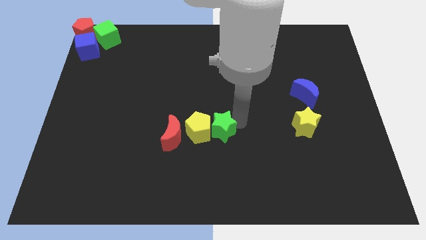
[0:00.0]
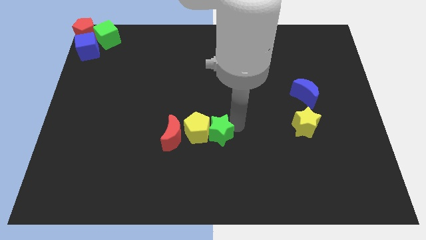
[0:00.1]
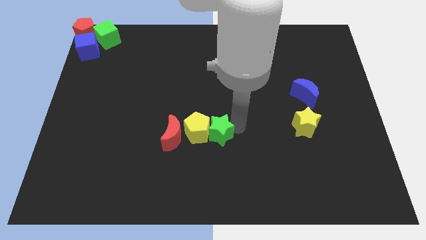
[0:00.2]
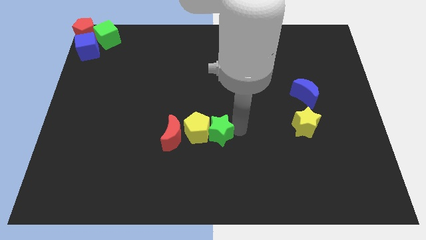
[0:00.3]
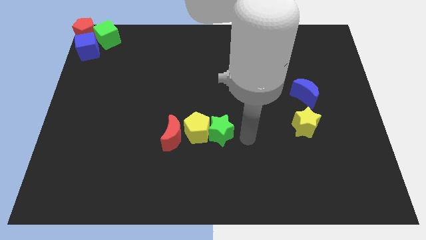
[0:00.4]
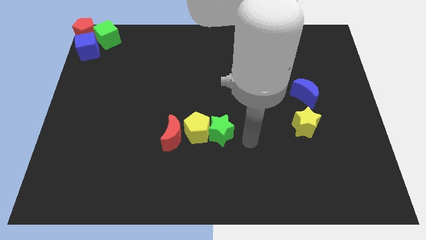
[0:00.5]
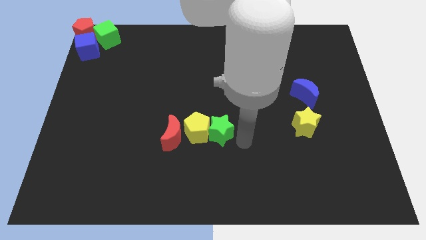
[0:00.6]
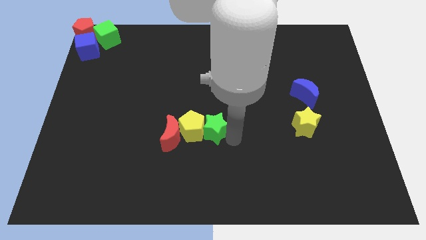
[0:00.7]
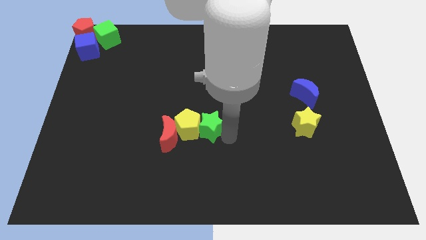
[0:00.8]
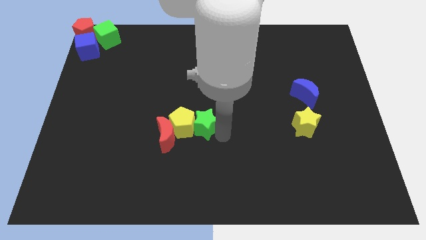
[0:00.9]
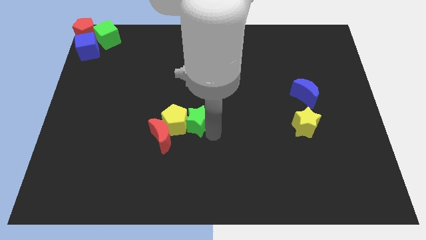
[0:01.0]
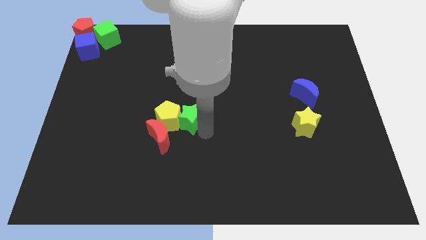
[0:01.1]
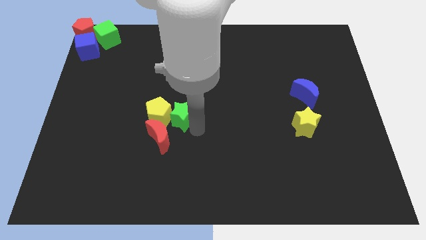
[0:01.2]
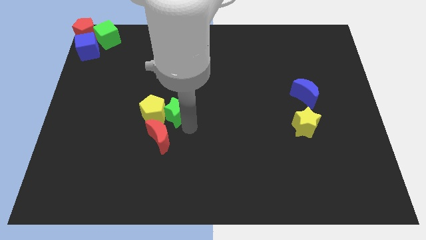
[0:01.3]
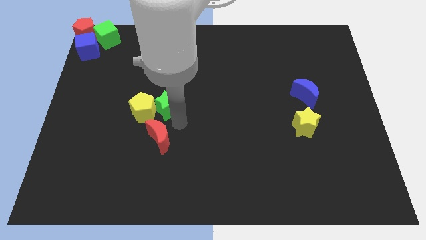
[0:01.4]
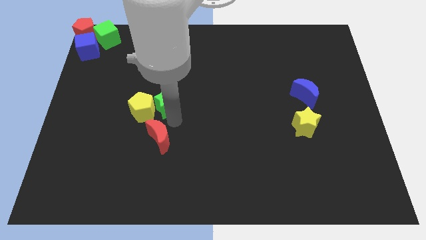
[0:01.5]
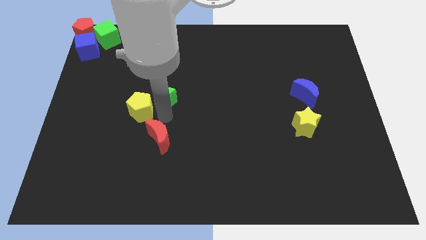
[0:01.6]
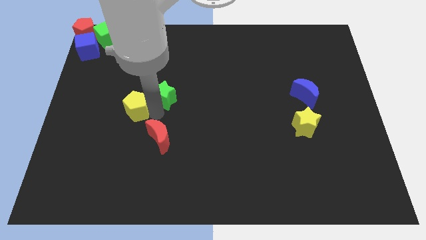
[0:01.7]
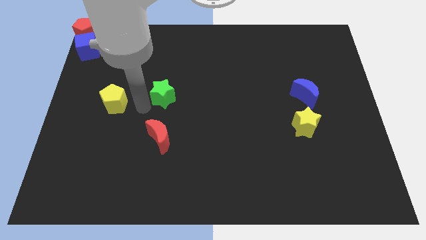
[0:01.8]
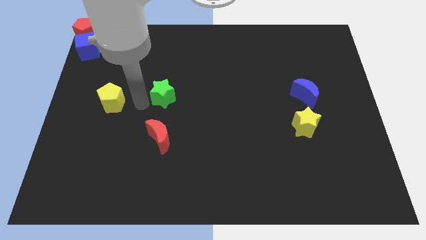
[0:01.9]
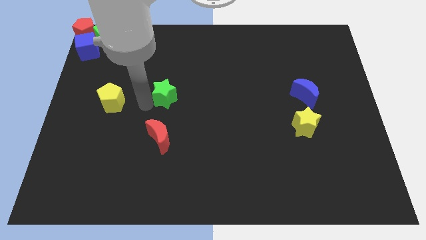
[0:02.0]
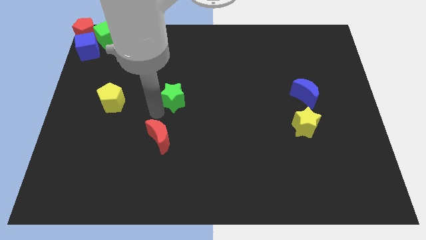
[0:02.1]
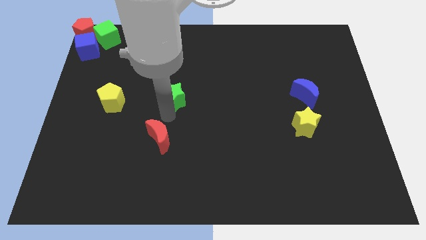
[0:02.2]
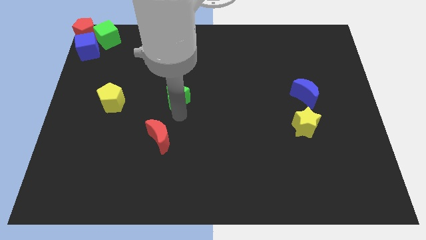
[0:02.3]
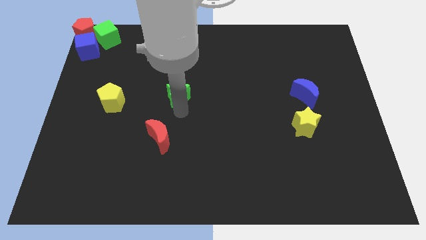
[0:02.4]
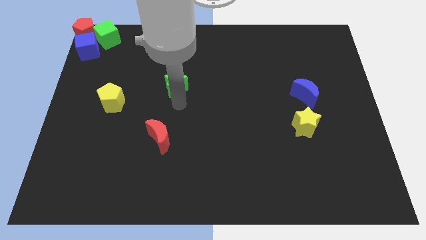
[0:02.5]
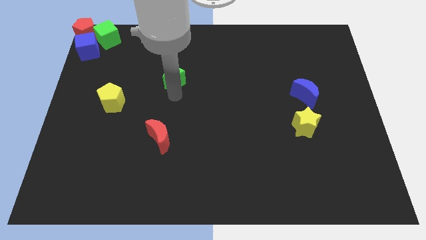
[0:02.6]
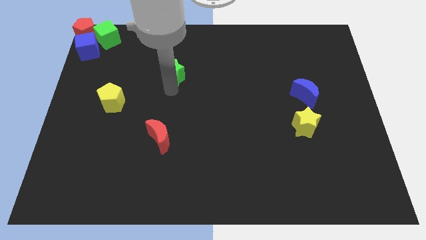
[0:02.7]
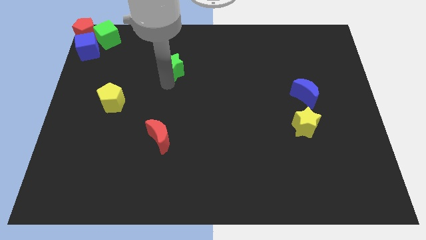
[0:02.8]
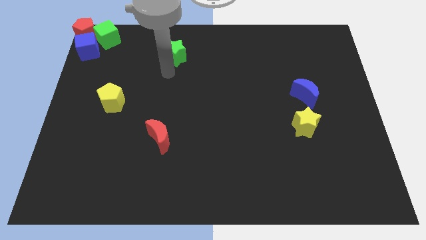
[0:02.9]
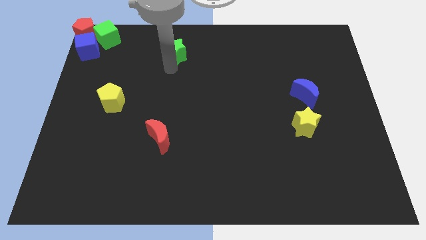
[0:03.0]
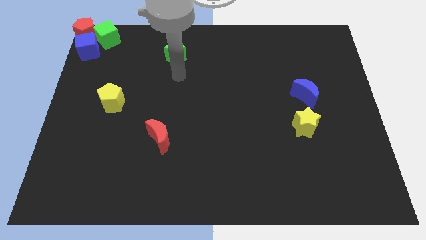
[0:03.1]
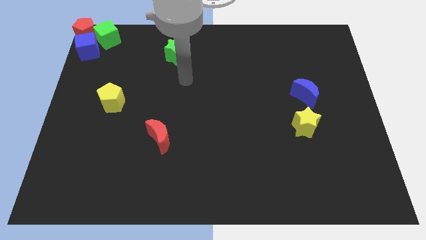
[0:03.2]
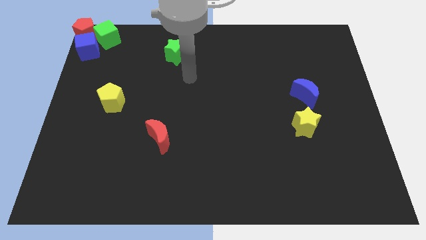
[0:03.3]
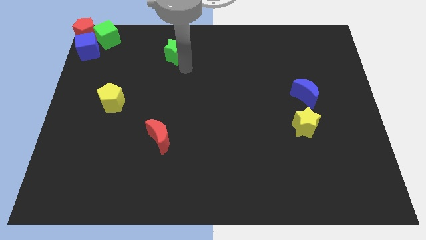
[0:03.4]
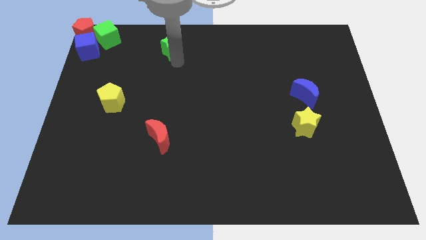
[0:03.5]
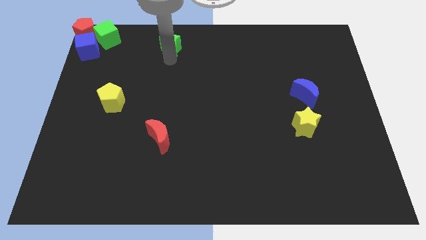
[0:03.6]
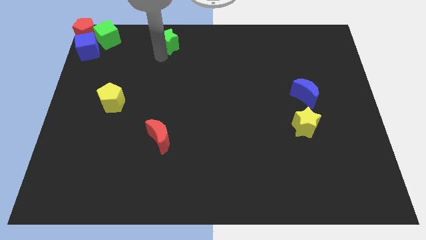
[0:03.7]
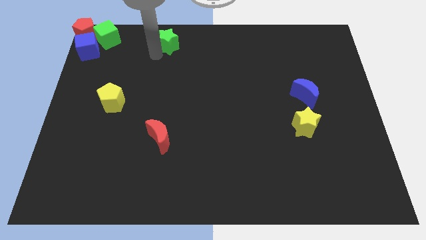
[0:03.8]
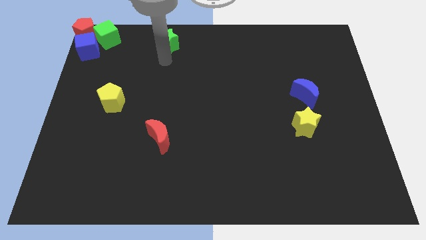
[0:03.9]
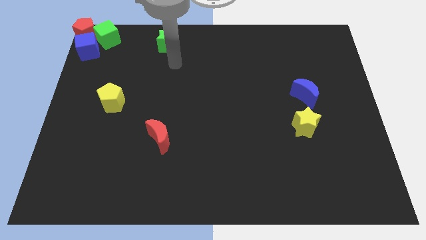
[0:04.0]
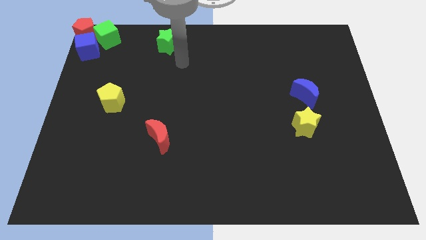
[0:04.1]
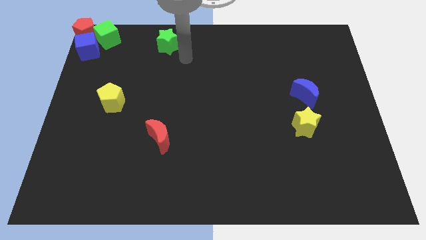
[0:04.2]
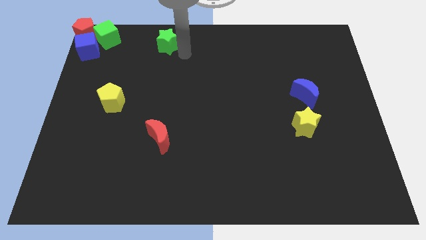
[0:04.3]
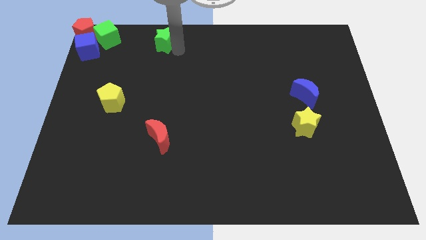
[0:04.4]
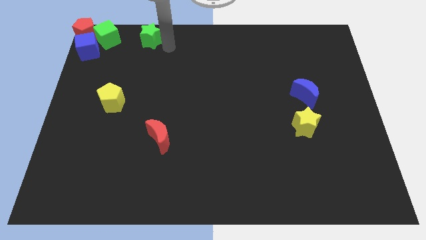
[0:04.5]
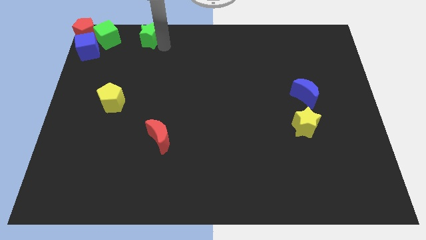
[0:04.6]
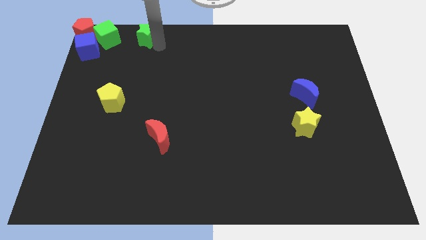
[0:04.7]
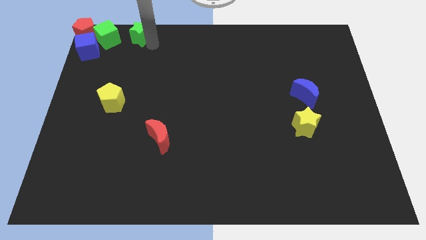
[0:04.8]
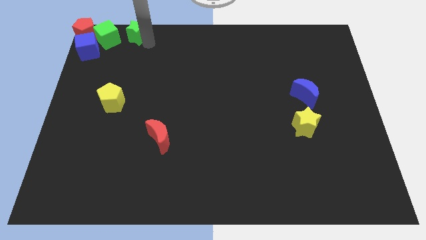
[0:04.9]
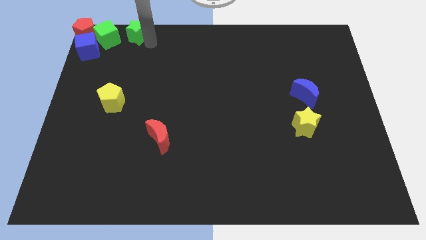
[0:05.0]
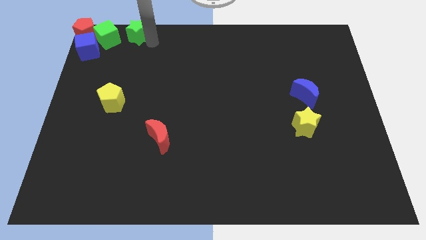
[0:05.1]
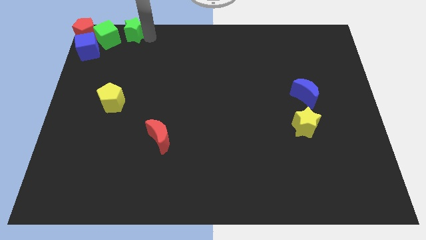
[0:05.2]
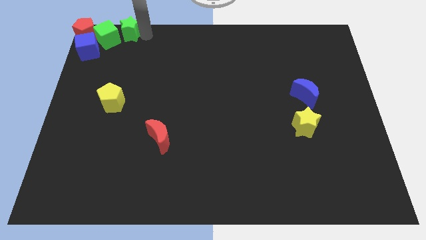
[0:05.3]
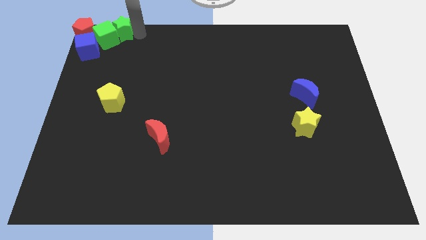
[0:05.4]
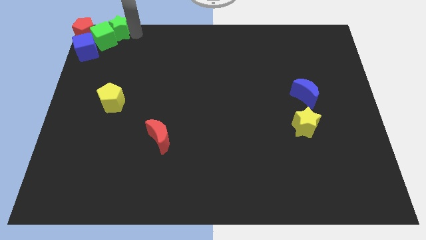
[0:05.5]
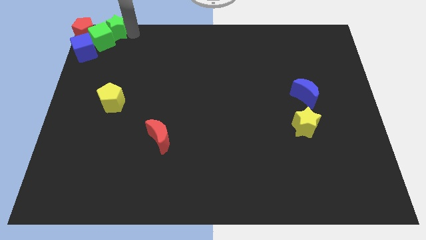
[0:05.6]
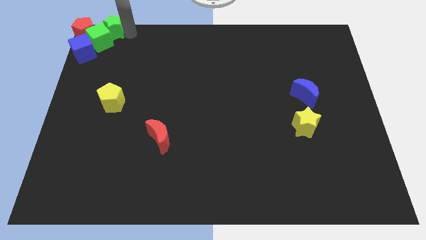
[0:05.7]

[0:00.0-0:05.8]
slide the green star towards the top left corner of the board

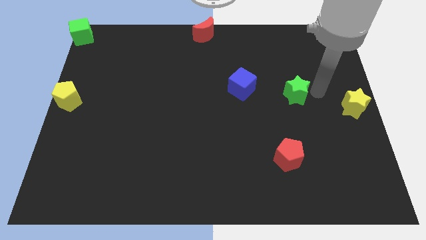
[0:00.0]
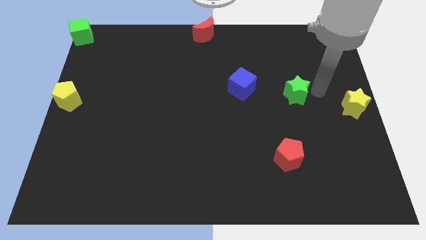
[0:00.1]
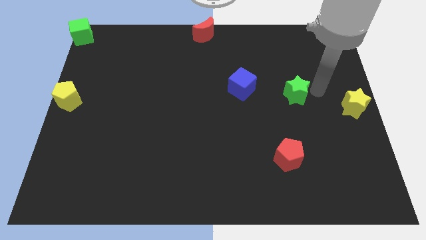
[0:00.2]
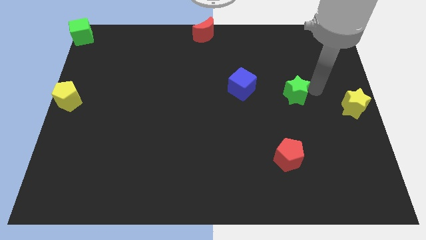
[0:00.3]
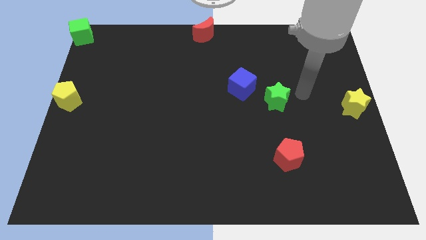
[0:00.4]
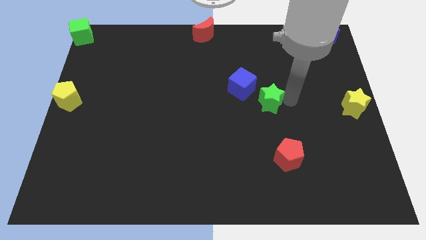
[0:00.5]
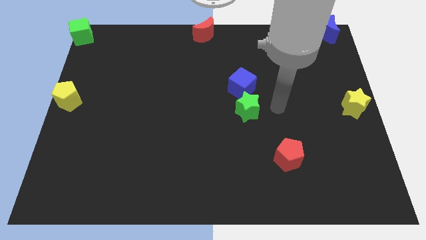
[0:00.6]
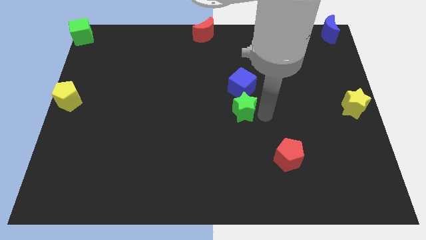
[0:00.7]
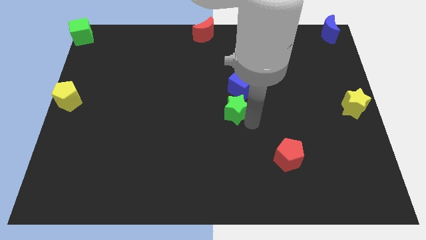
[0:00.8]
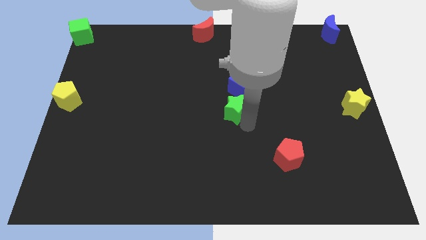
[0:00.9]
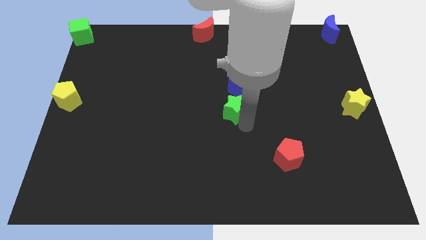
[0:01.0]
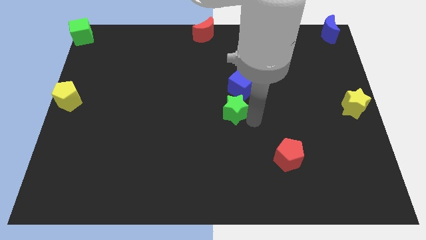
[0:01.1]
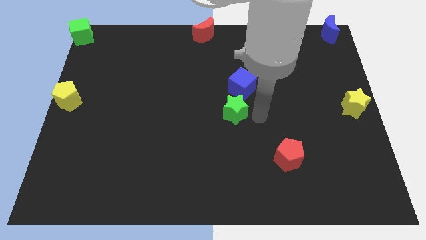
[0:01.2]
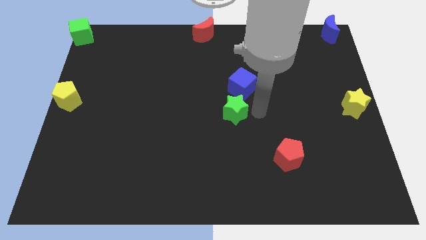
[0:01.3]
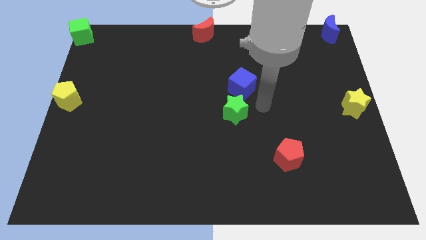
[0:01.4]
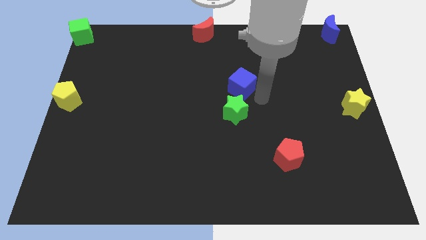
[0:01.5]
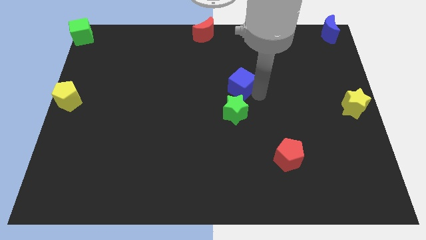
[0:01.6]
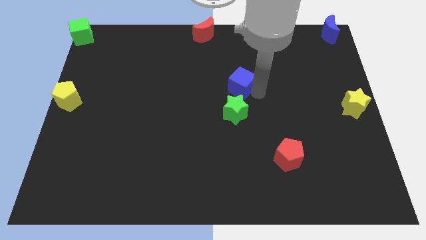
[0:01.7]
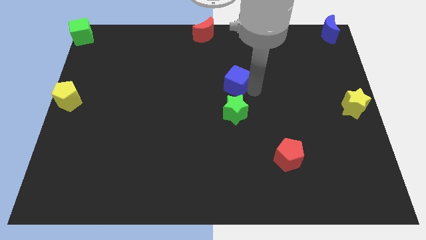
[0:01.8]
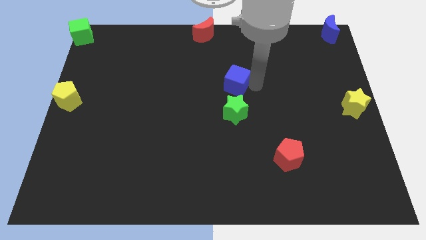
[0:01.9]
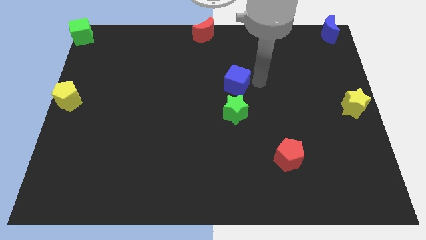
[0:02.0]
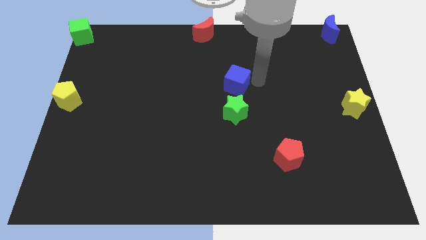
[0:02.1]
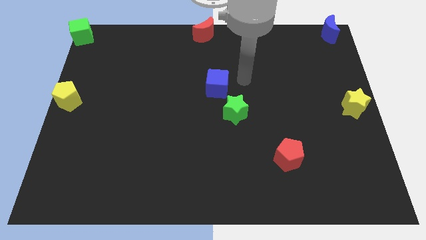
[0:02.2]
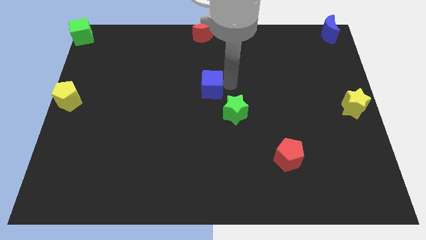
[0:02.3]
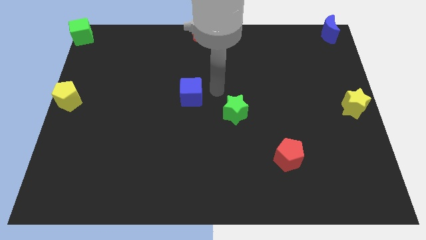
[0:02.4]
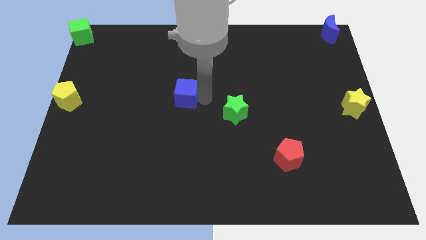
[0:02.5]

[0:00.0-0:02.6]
move the green star to the middle of the board

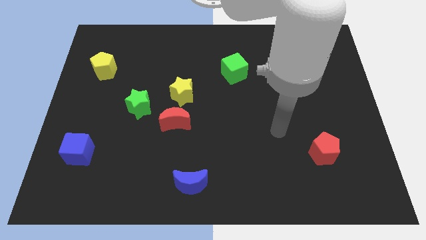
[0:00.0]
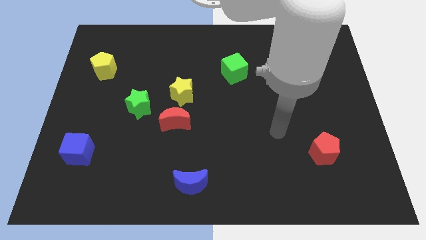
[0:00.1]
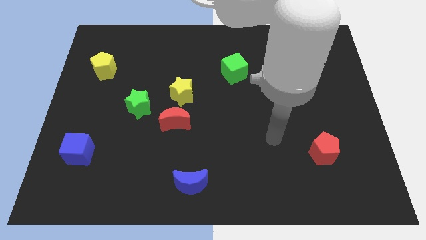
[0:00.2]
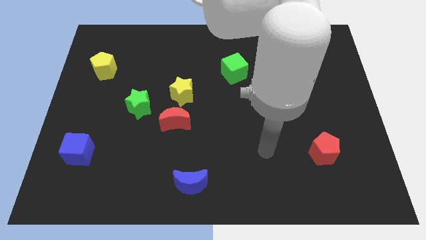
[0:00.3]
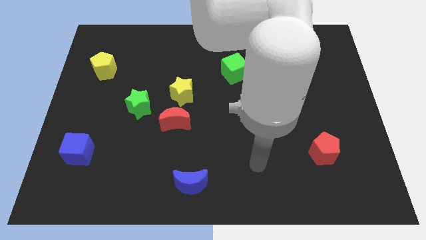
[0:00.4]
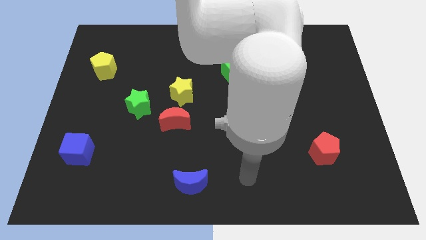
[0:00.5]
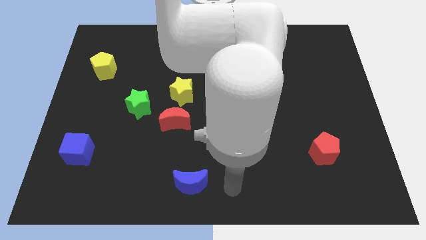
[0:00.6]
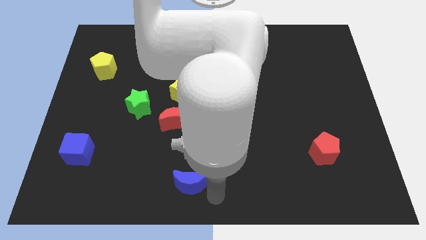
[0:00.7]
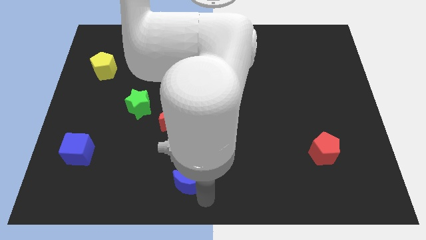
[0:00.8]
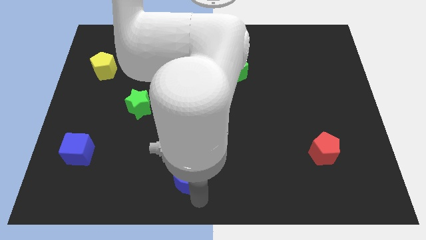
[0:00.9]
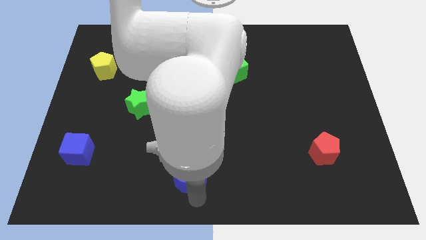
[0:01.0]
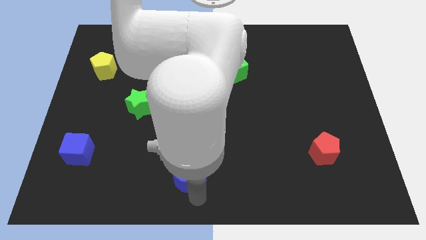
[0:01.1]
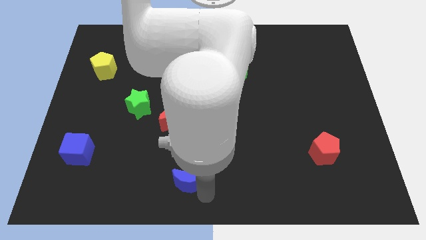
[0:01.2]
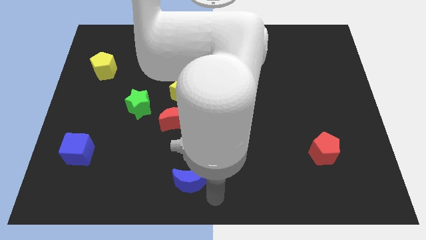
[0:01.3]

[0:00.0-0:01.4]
touch the blue moon
